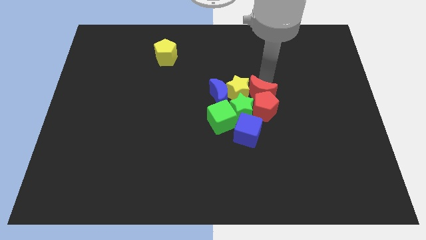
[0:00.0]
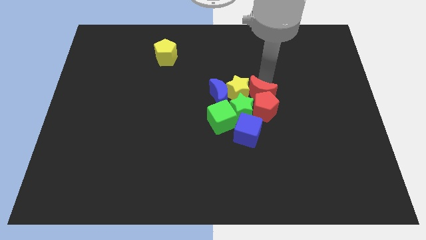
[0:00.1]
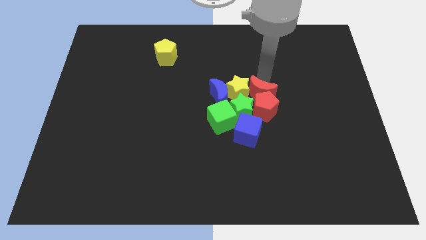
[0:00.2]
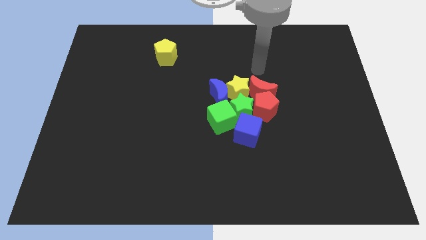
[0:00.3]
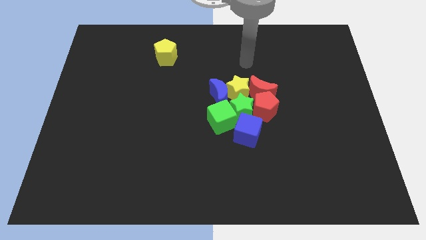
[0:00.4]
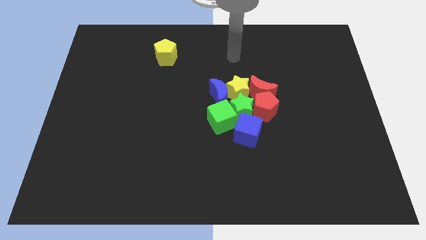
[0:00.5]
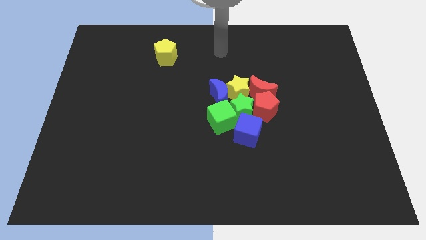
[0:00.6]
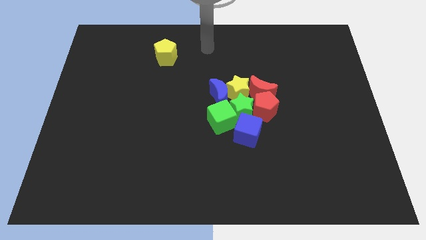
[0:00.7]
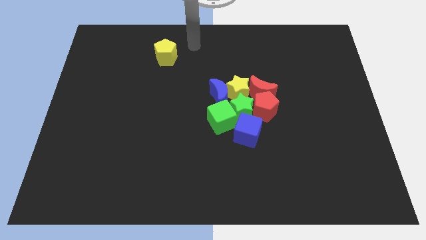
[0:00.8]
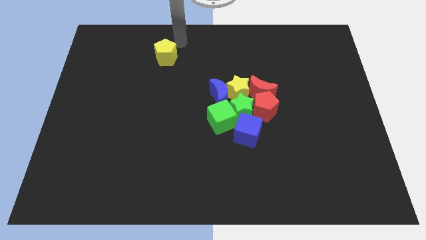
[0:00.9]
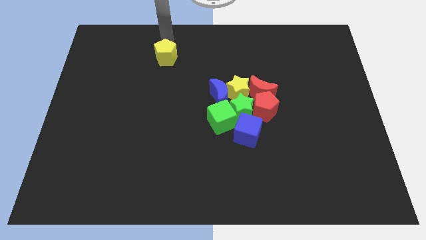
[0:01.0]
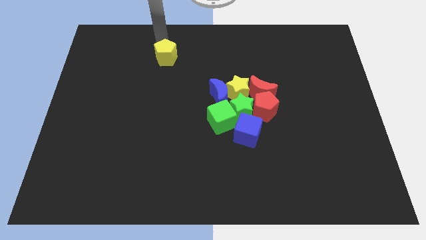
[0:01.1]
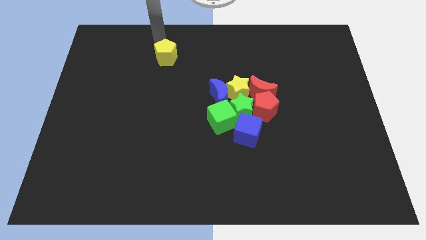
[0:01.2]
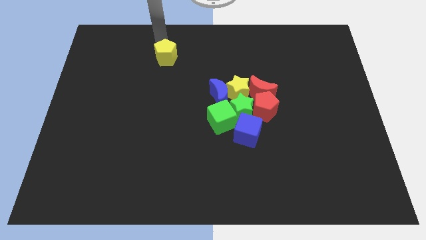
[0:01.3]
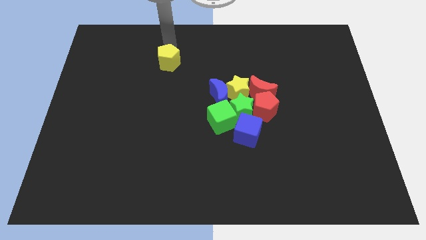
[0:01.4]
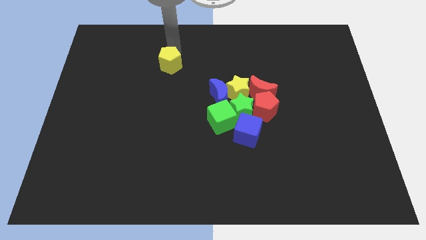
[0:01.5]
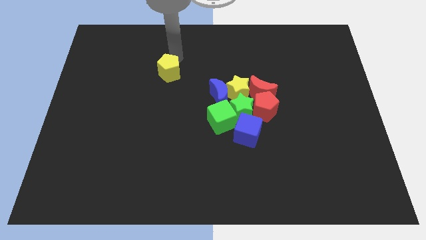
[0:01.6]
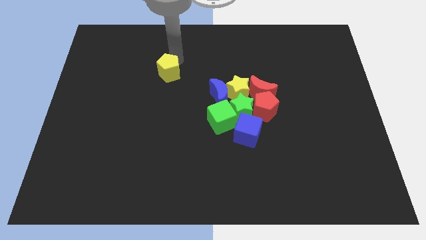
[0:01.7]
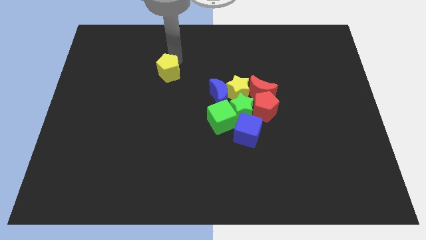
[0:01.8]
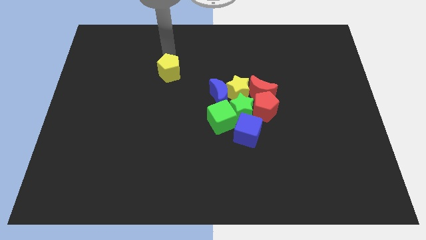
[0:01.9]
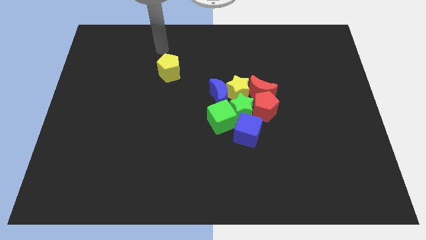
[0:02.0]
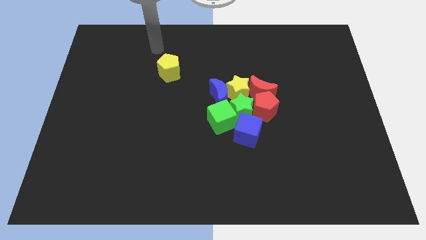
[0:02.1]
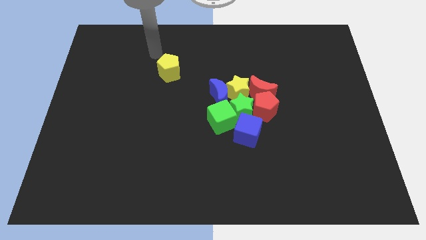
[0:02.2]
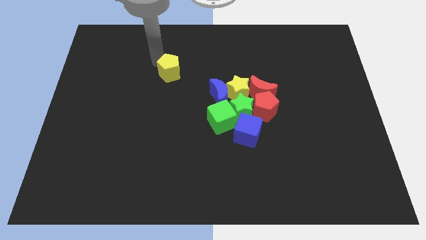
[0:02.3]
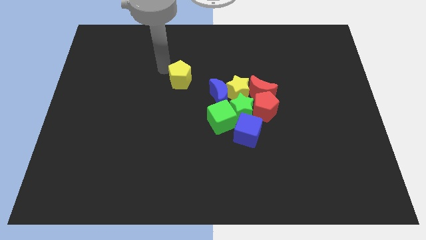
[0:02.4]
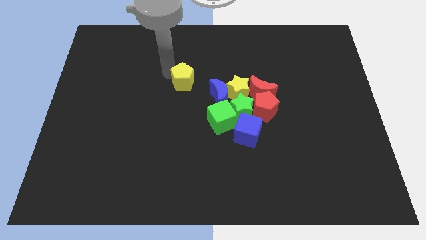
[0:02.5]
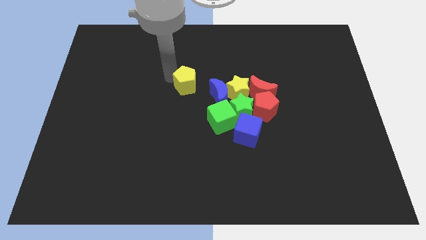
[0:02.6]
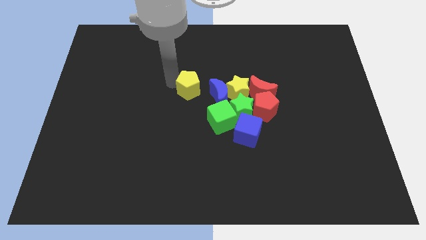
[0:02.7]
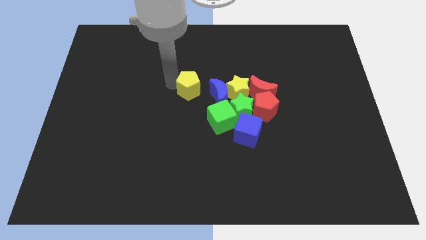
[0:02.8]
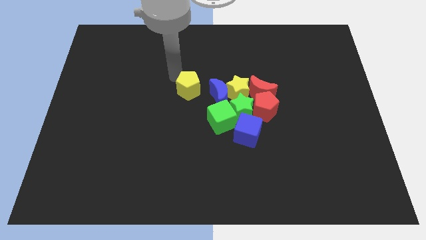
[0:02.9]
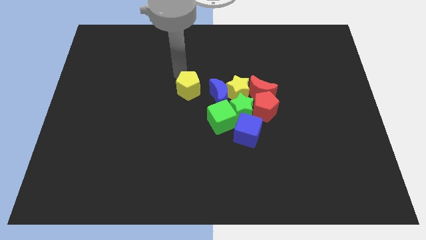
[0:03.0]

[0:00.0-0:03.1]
place the yellow pentagon diagonally to green cube

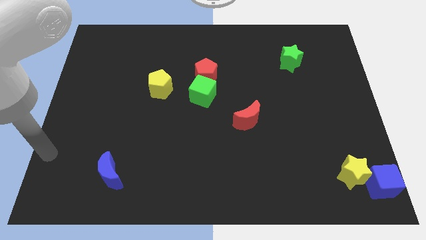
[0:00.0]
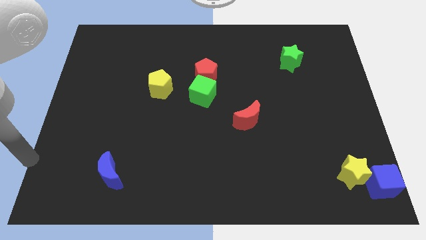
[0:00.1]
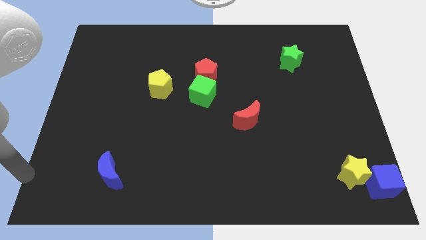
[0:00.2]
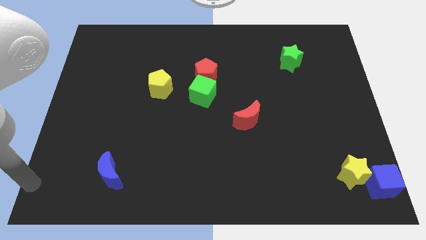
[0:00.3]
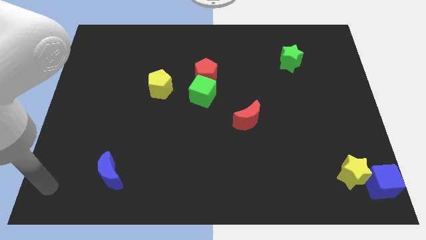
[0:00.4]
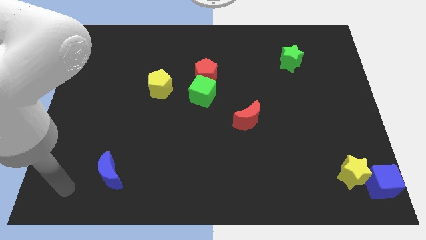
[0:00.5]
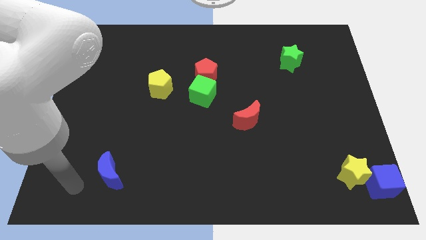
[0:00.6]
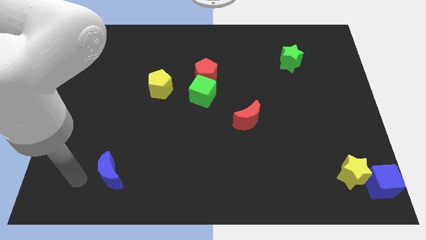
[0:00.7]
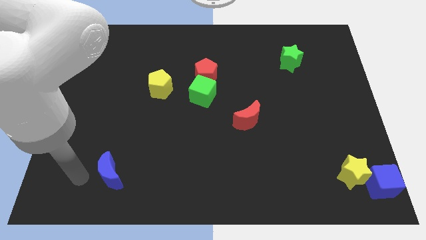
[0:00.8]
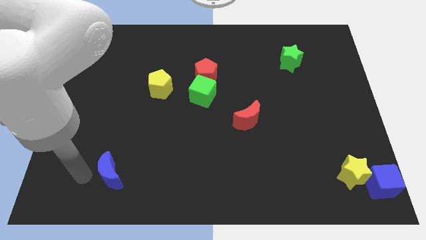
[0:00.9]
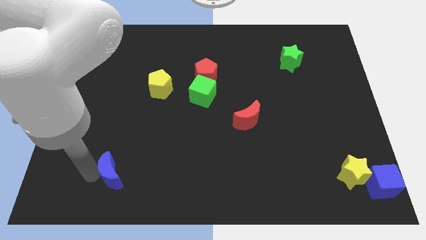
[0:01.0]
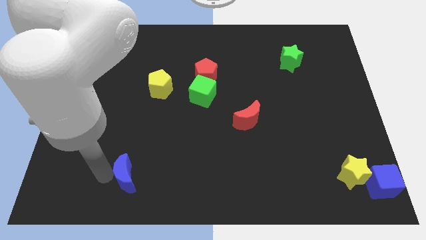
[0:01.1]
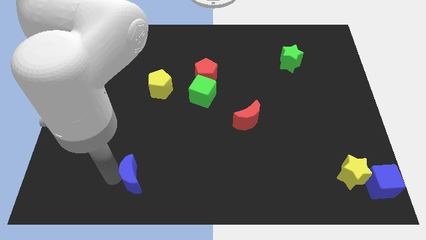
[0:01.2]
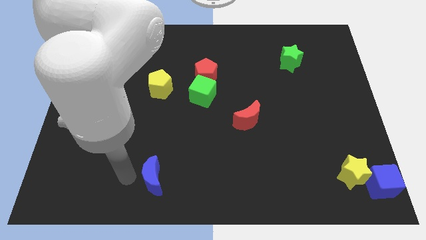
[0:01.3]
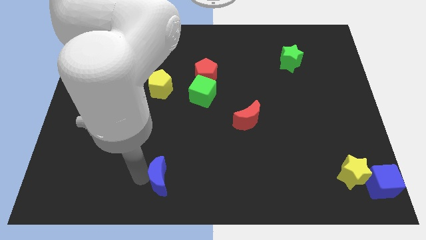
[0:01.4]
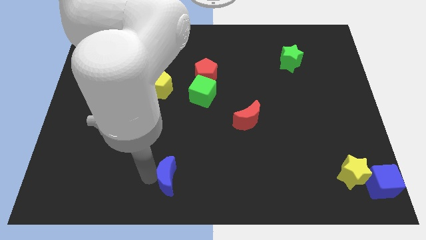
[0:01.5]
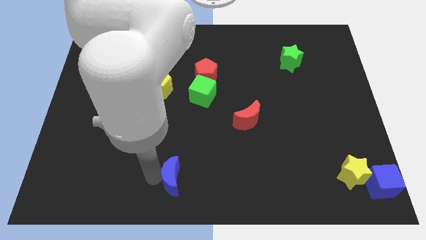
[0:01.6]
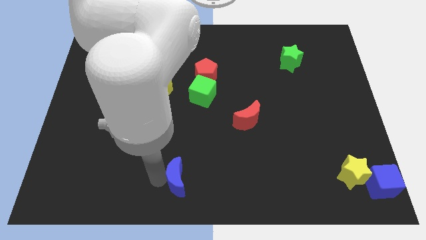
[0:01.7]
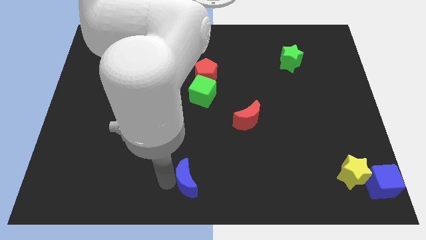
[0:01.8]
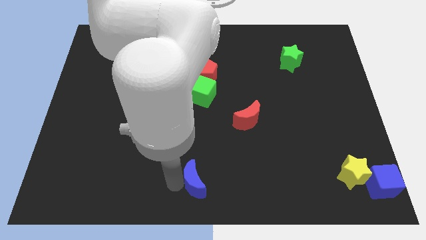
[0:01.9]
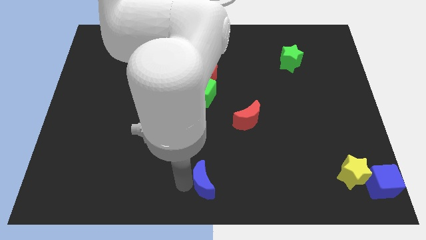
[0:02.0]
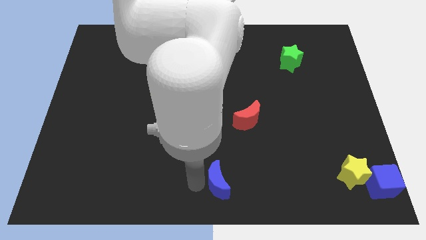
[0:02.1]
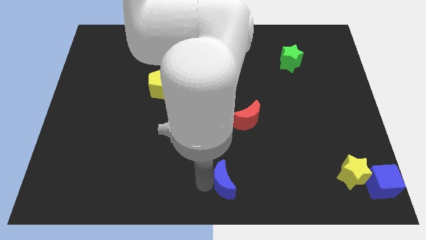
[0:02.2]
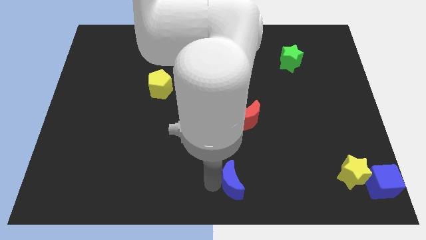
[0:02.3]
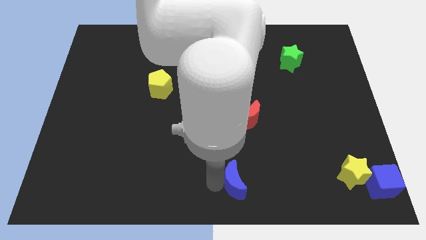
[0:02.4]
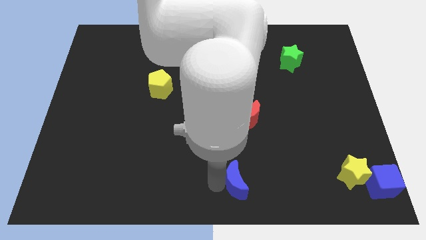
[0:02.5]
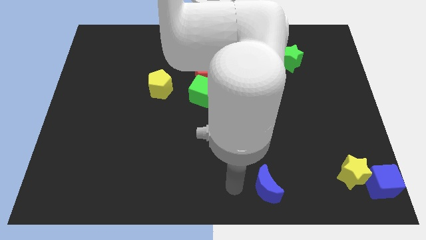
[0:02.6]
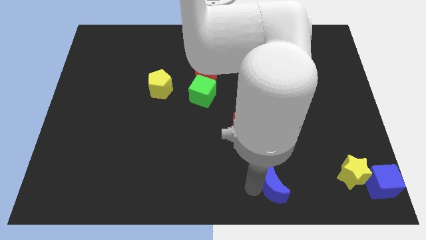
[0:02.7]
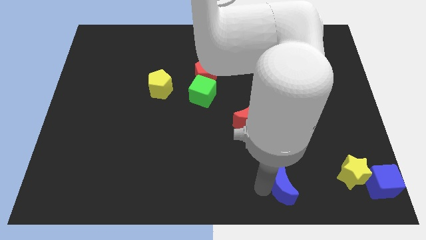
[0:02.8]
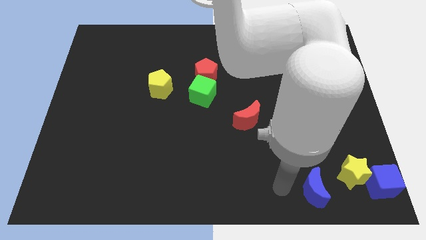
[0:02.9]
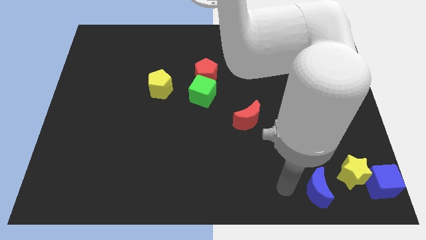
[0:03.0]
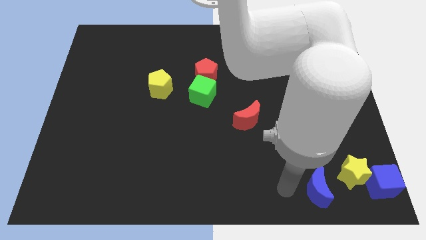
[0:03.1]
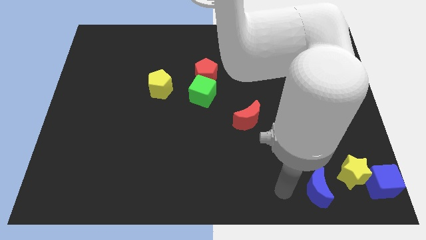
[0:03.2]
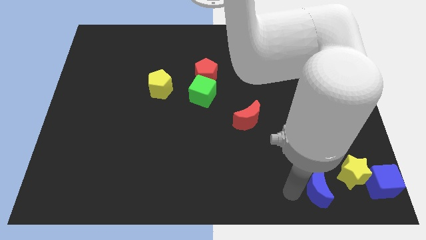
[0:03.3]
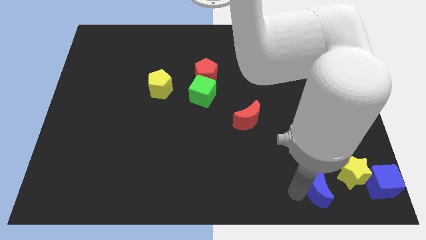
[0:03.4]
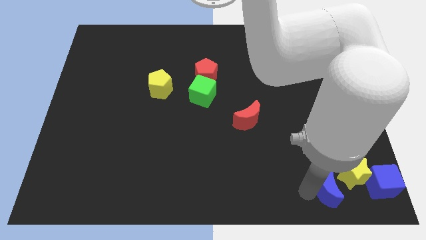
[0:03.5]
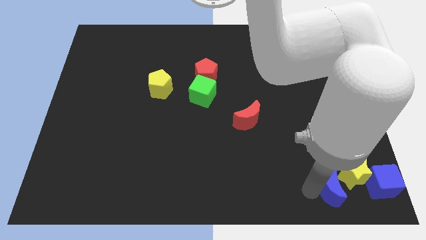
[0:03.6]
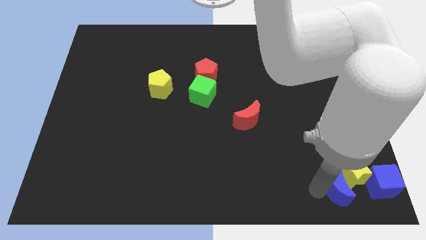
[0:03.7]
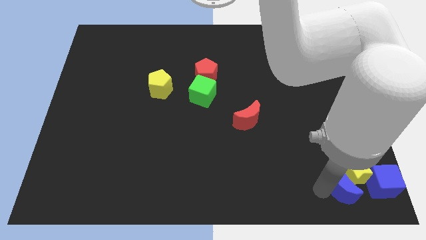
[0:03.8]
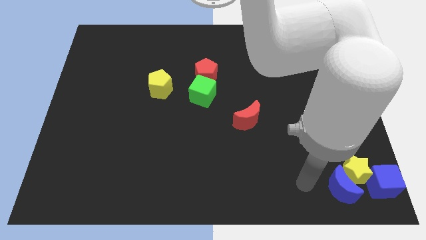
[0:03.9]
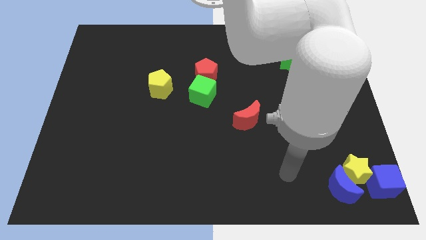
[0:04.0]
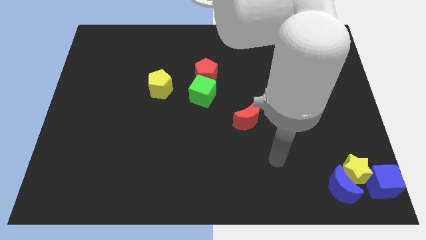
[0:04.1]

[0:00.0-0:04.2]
push the blue crescent into the left side of the yellow star

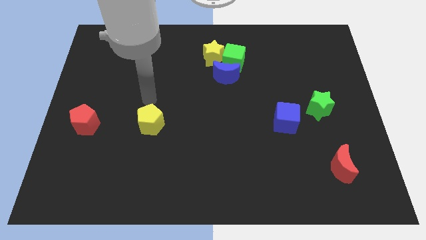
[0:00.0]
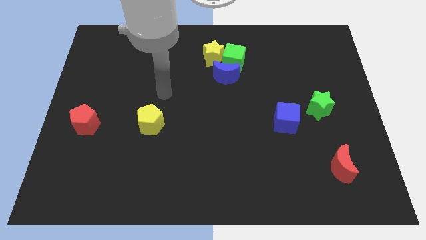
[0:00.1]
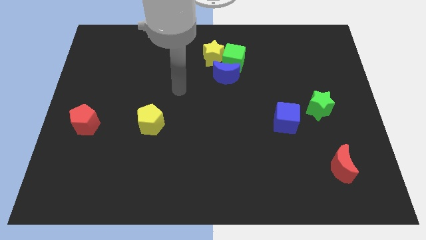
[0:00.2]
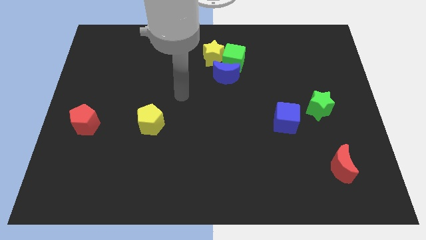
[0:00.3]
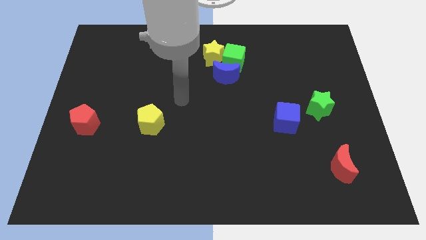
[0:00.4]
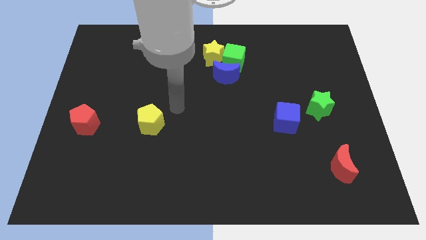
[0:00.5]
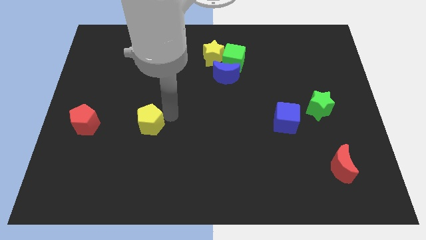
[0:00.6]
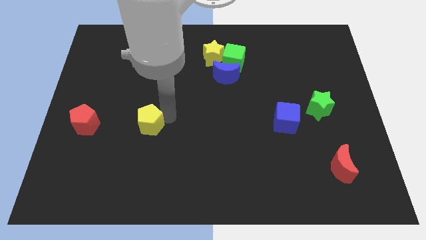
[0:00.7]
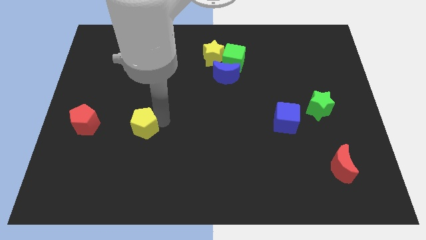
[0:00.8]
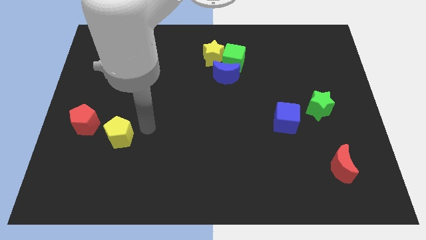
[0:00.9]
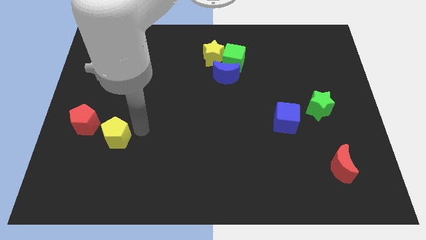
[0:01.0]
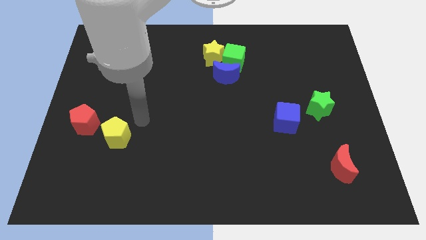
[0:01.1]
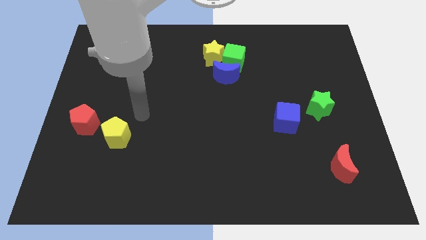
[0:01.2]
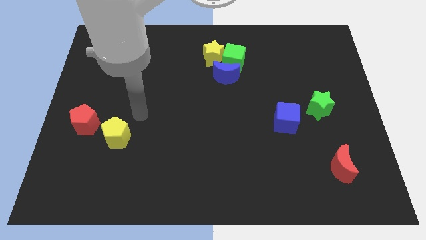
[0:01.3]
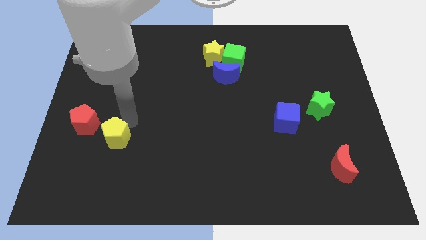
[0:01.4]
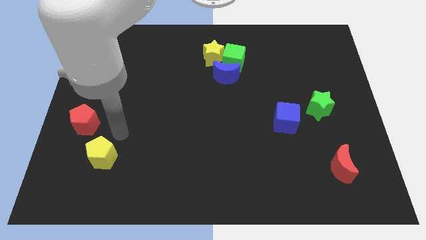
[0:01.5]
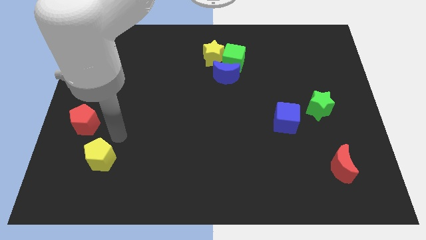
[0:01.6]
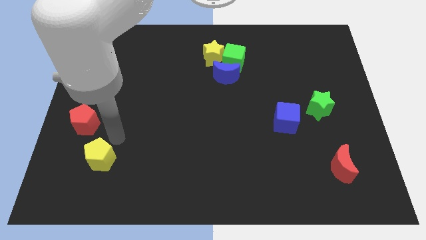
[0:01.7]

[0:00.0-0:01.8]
slide the yellow pentagon diagonally bottom right to the red pentagon
